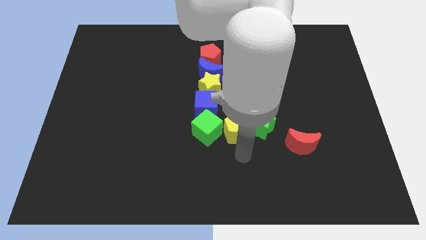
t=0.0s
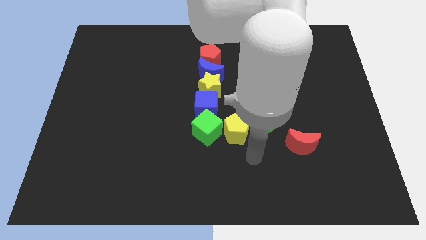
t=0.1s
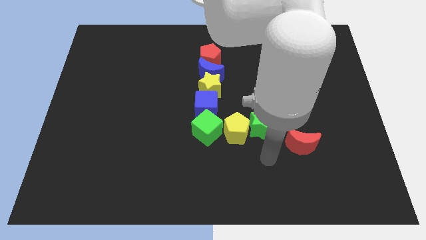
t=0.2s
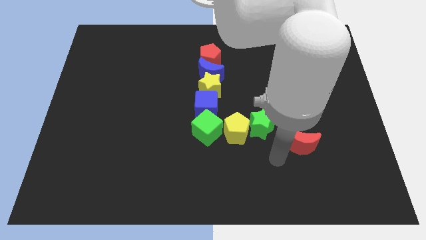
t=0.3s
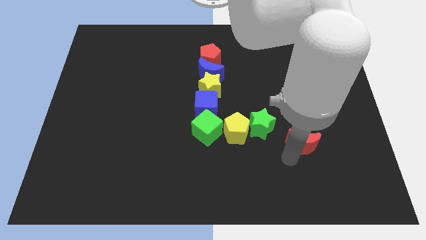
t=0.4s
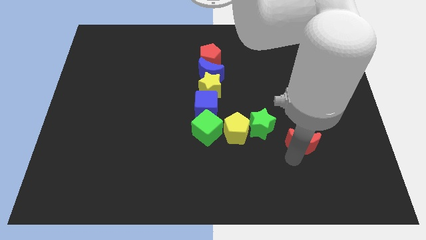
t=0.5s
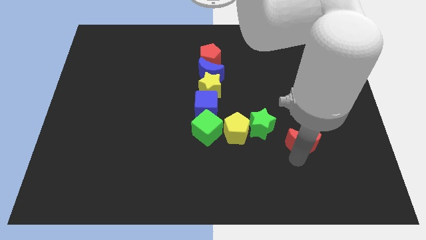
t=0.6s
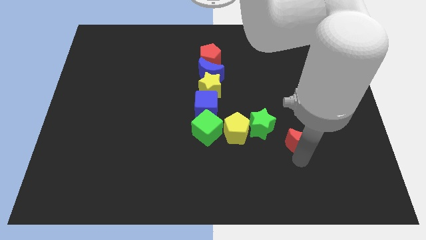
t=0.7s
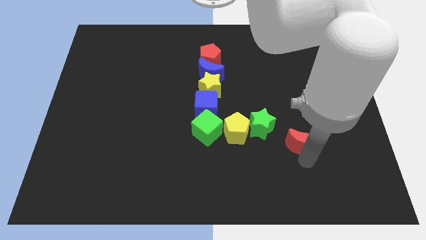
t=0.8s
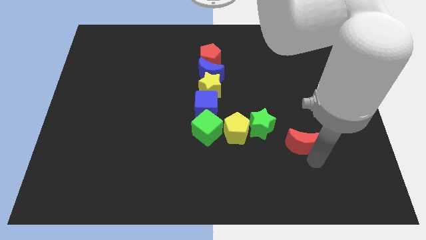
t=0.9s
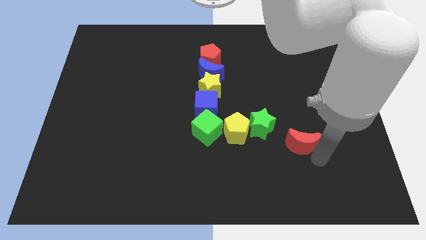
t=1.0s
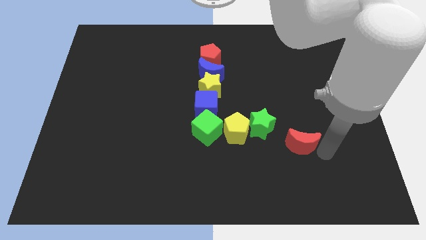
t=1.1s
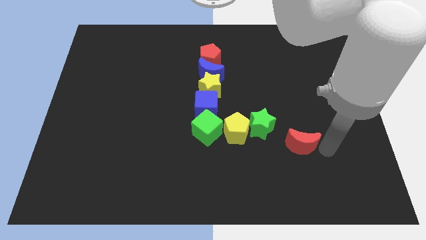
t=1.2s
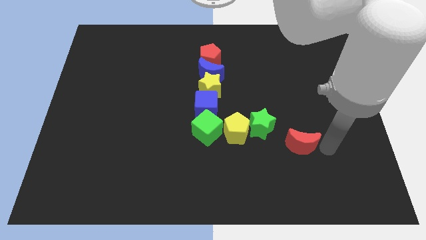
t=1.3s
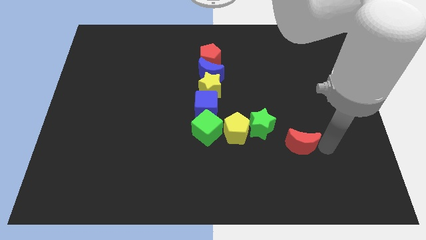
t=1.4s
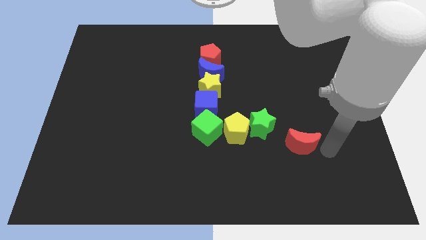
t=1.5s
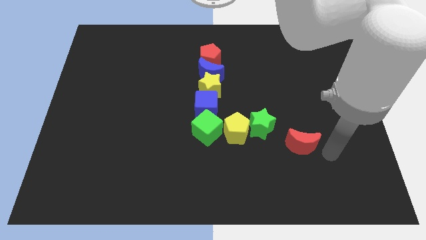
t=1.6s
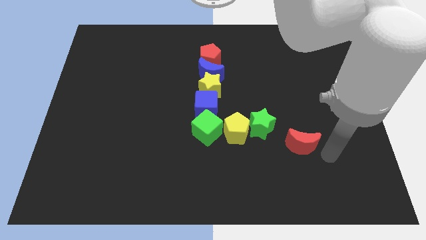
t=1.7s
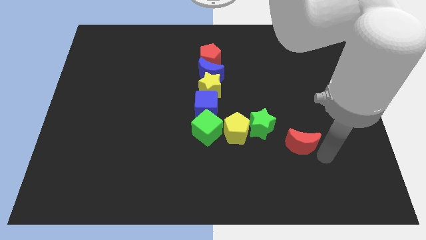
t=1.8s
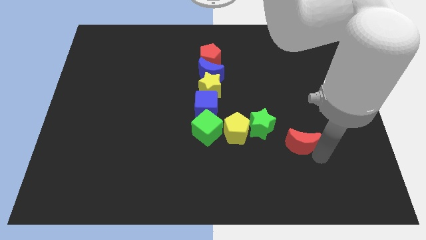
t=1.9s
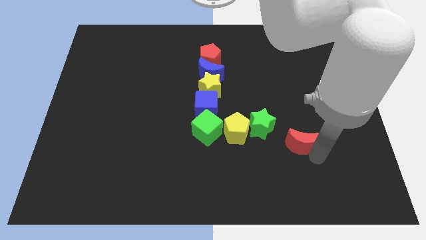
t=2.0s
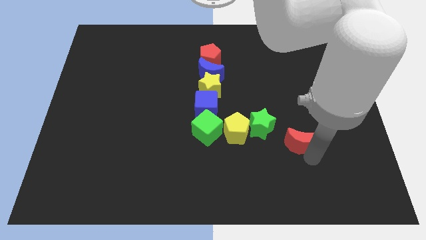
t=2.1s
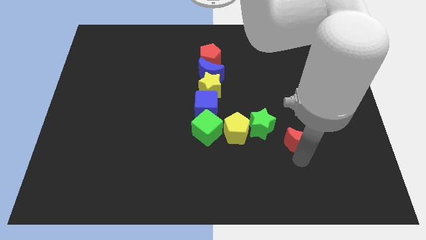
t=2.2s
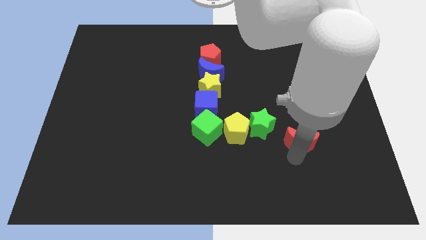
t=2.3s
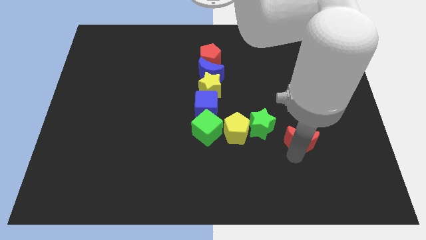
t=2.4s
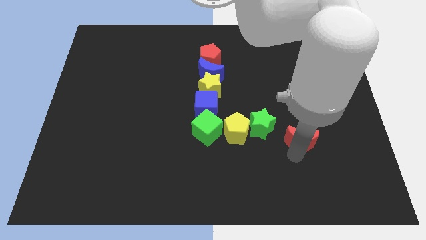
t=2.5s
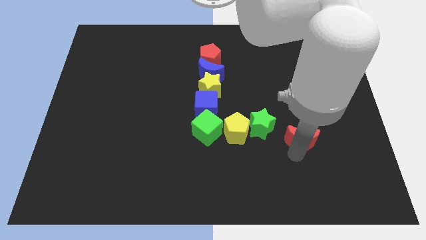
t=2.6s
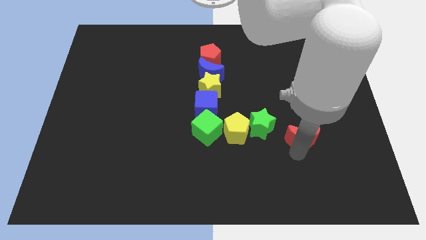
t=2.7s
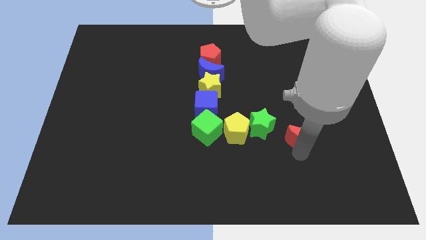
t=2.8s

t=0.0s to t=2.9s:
move the red crescent towards the line of blocks

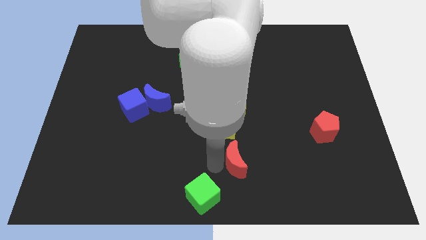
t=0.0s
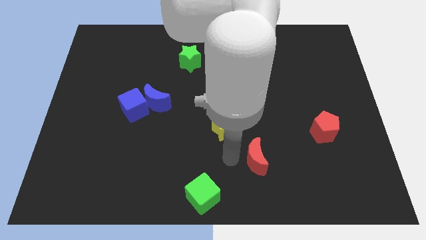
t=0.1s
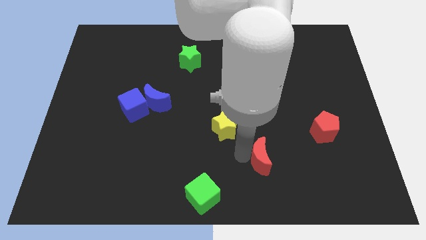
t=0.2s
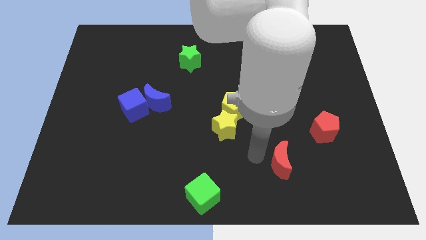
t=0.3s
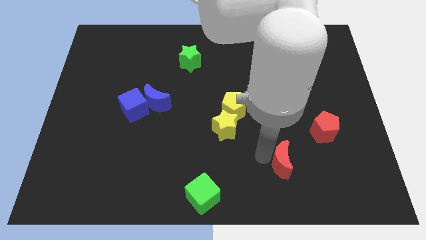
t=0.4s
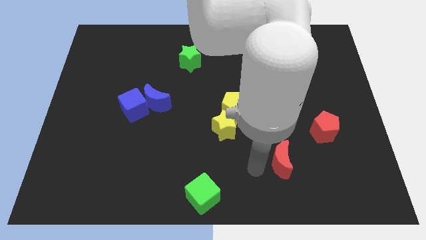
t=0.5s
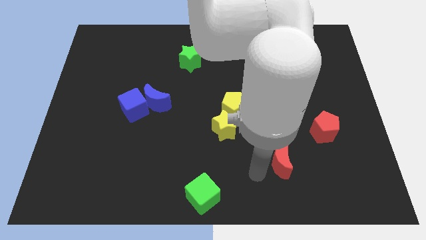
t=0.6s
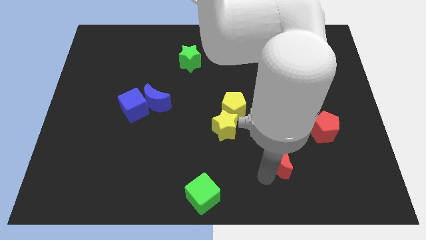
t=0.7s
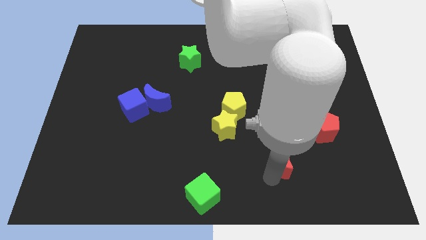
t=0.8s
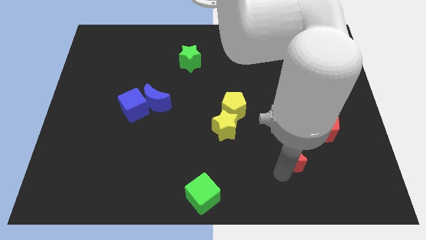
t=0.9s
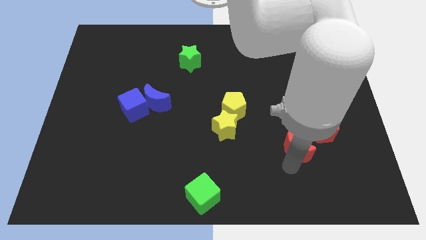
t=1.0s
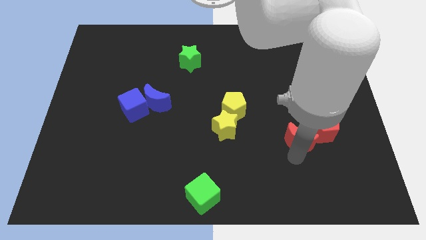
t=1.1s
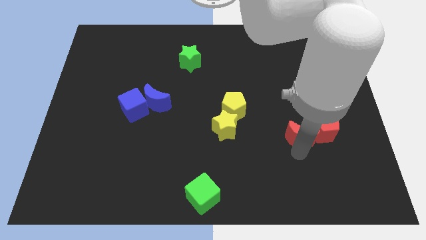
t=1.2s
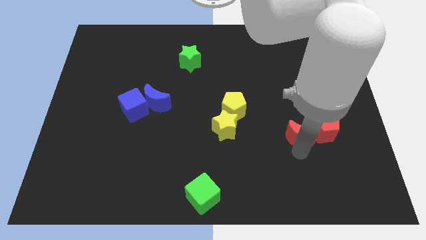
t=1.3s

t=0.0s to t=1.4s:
move red crescent into red pentagon

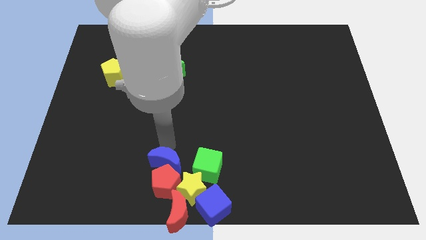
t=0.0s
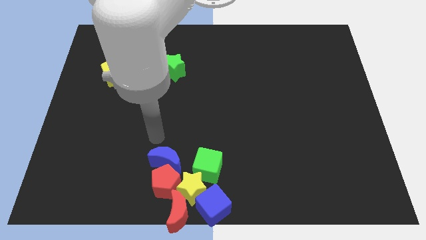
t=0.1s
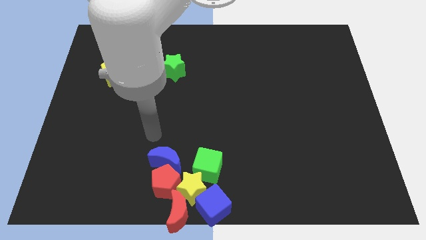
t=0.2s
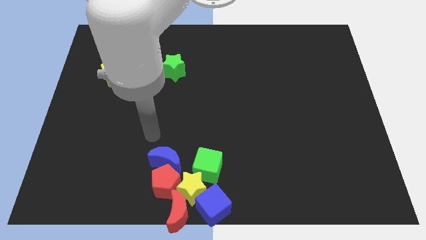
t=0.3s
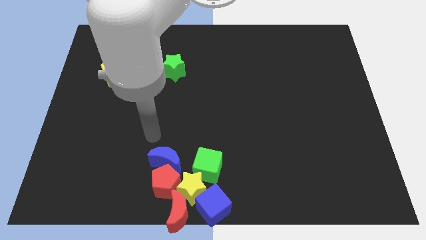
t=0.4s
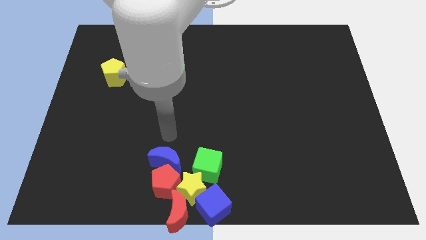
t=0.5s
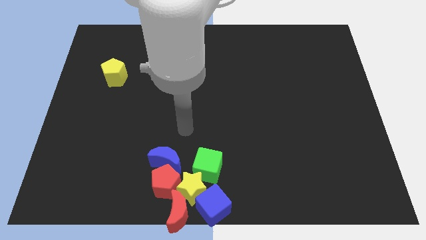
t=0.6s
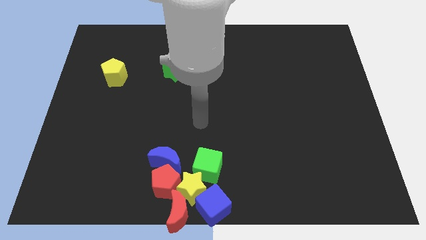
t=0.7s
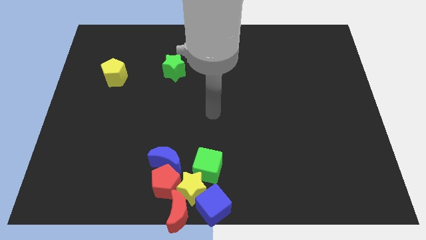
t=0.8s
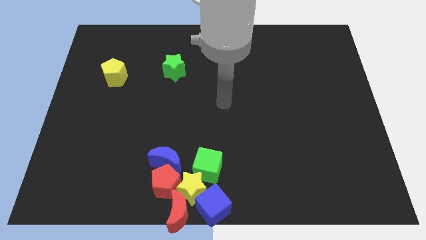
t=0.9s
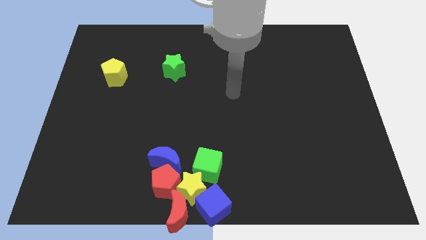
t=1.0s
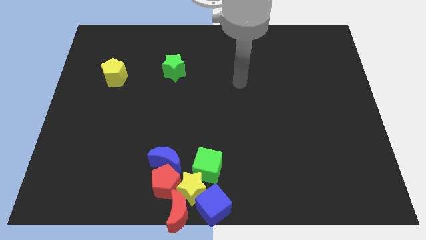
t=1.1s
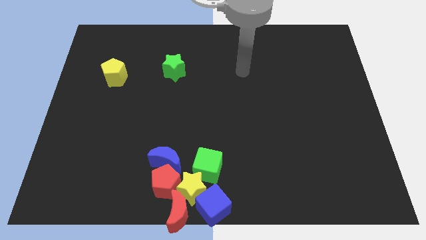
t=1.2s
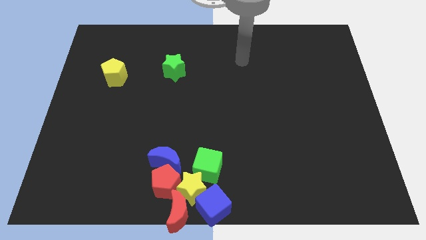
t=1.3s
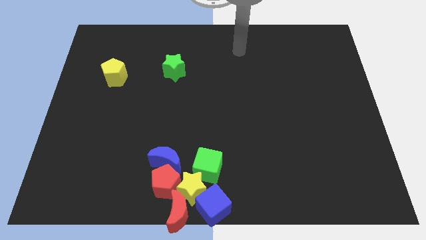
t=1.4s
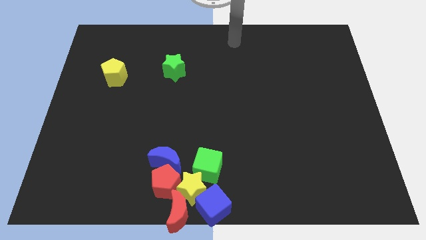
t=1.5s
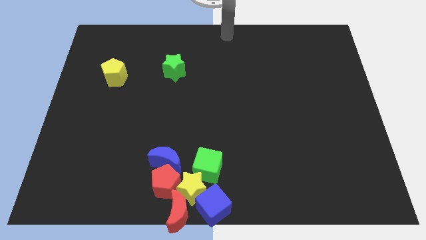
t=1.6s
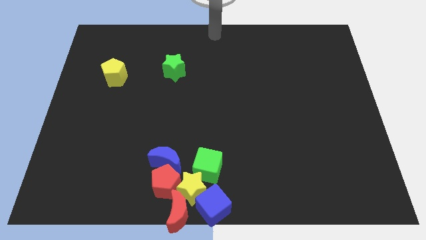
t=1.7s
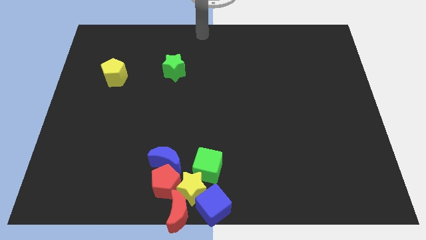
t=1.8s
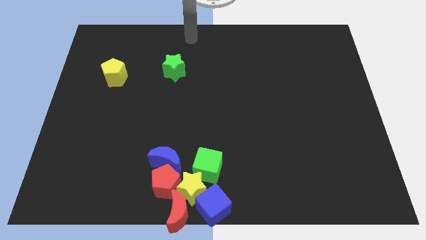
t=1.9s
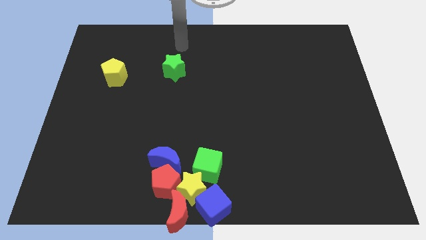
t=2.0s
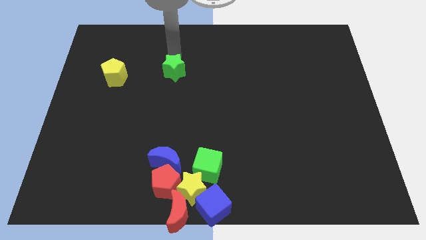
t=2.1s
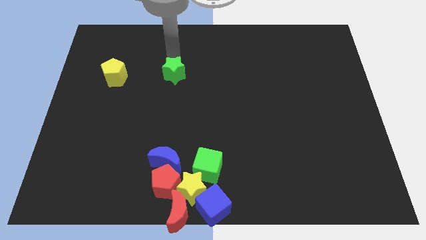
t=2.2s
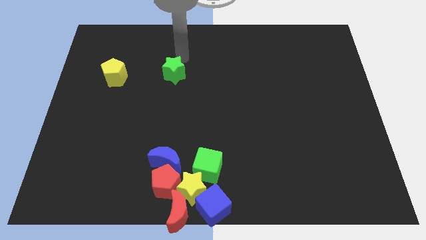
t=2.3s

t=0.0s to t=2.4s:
move your arm to the top of the green star

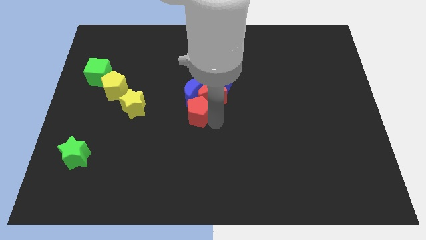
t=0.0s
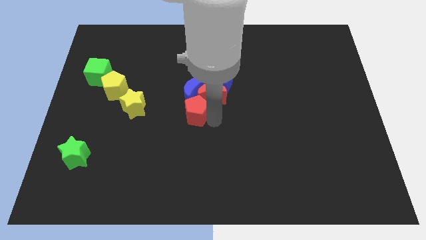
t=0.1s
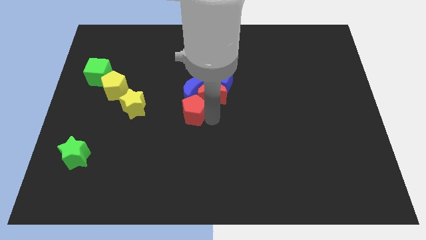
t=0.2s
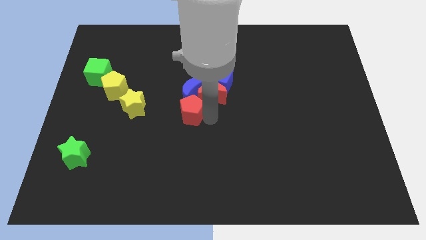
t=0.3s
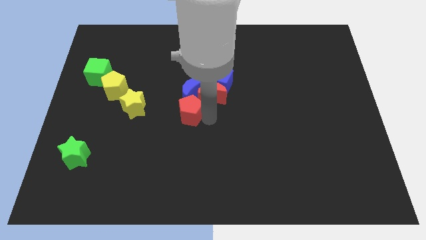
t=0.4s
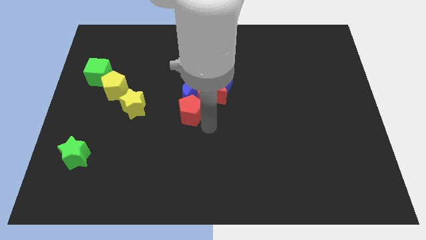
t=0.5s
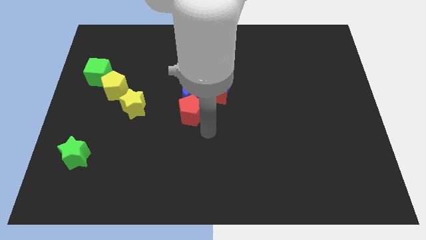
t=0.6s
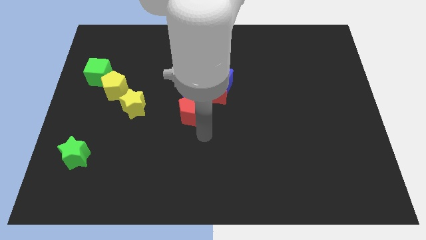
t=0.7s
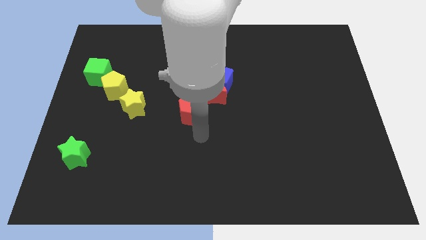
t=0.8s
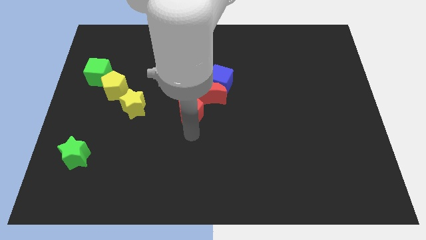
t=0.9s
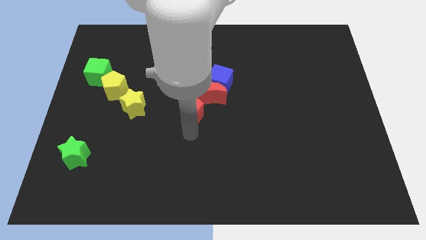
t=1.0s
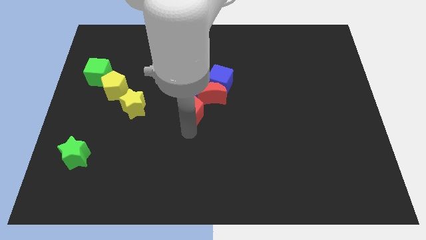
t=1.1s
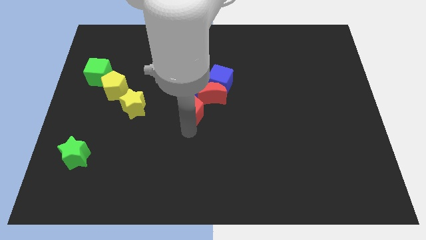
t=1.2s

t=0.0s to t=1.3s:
point your arm below red pentagon

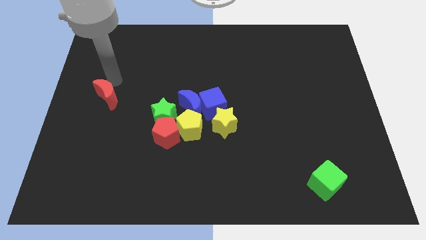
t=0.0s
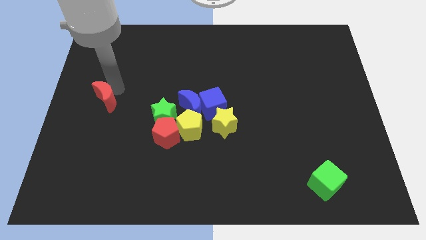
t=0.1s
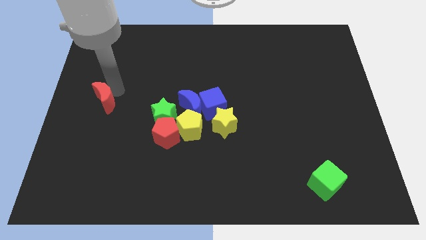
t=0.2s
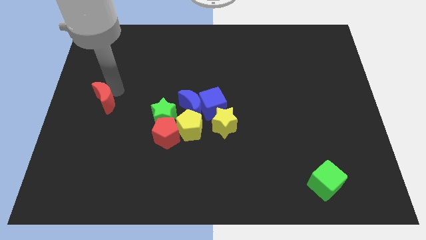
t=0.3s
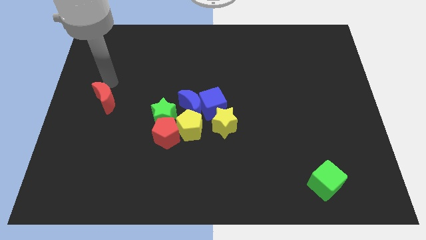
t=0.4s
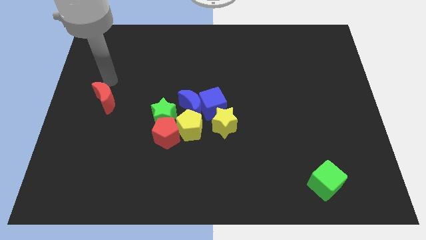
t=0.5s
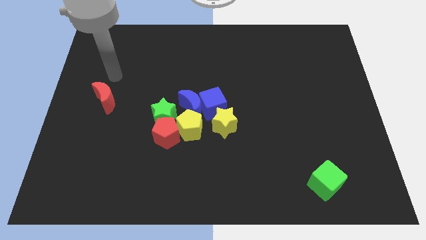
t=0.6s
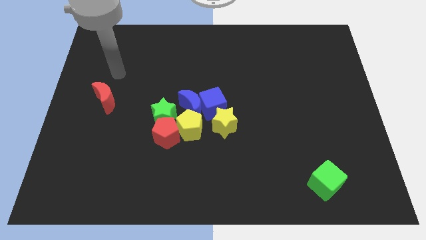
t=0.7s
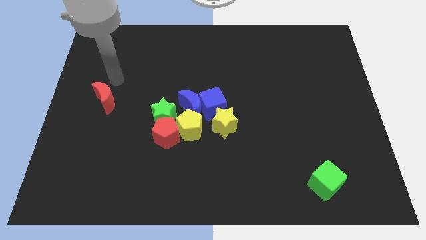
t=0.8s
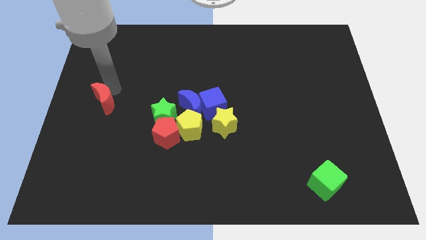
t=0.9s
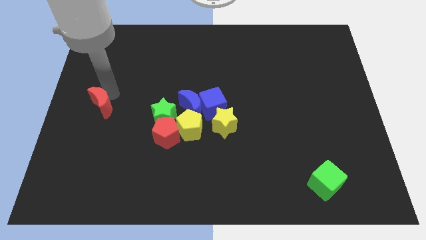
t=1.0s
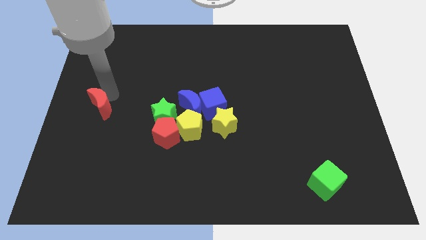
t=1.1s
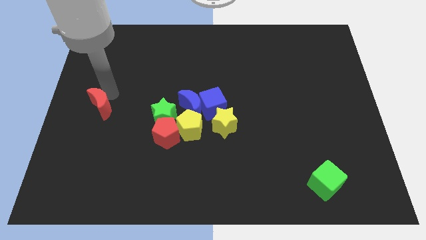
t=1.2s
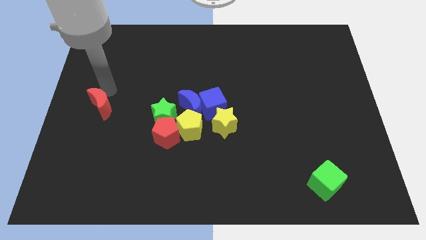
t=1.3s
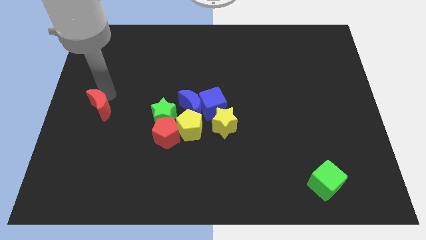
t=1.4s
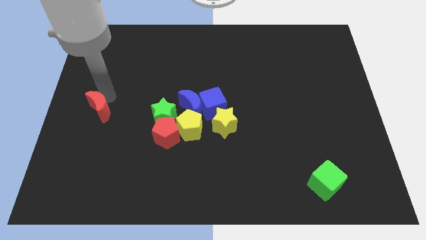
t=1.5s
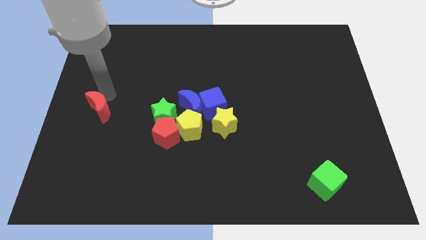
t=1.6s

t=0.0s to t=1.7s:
push red crescent towards the left center of the board
